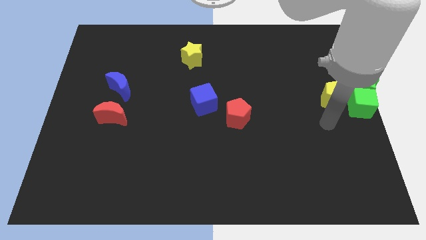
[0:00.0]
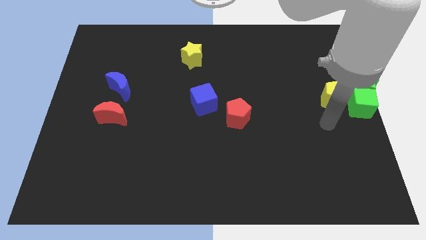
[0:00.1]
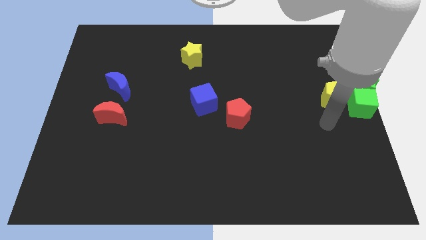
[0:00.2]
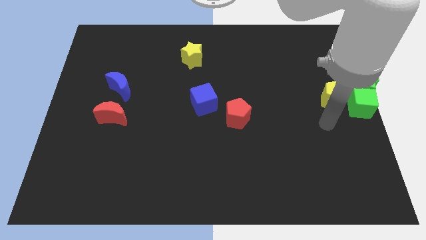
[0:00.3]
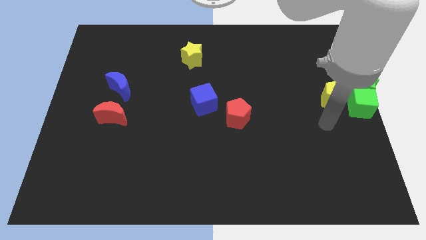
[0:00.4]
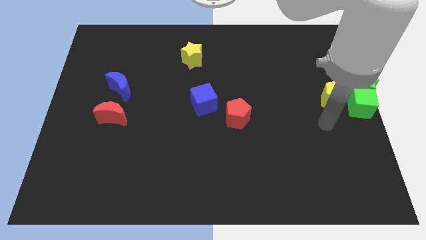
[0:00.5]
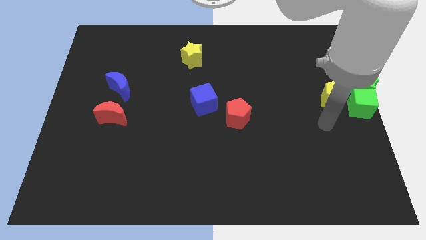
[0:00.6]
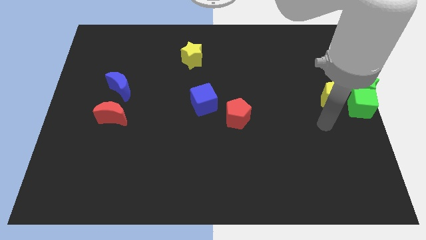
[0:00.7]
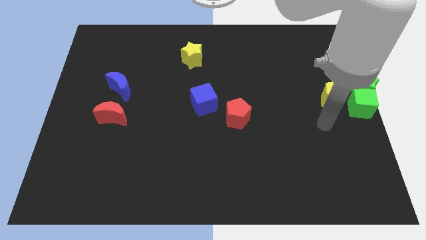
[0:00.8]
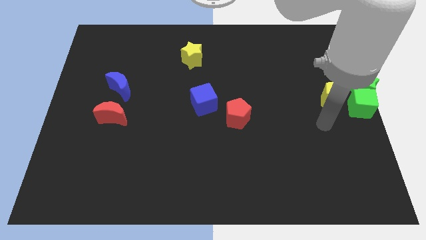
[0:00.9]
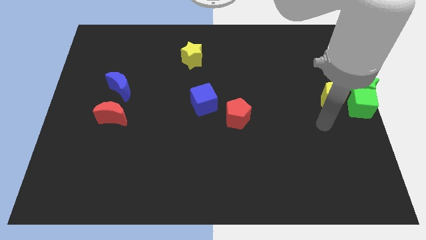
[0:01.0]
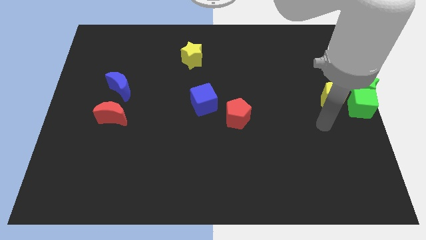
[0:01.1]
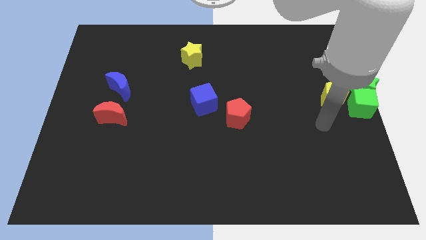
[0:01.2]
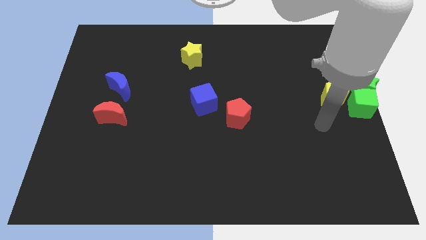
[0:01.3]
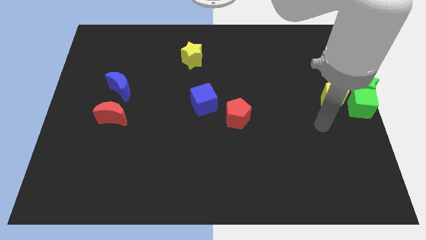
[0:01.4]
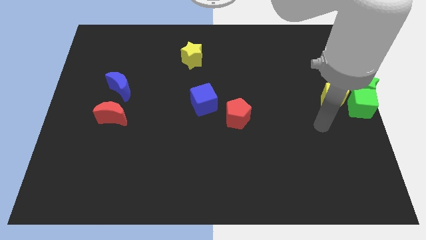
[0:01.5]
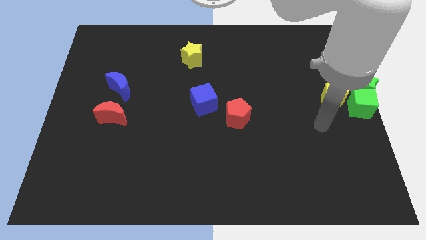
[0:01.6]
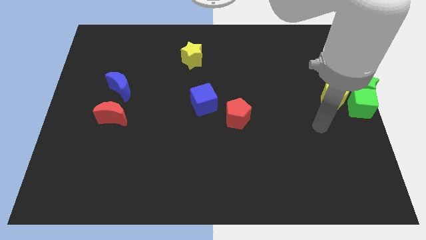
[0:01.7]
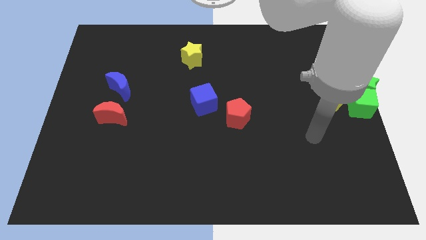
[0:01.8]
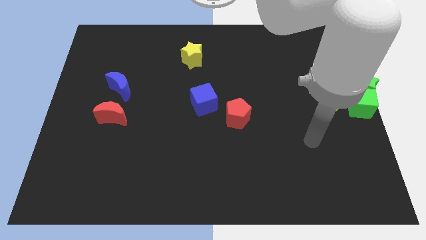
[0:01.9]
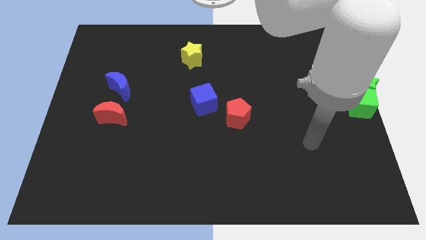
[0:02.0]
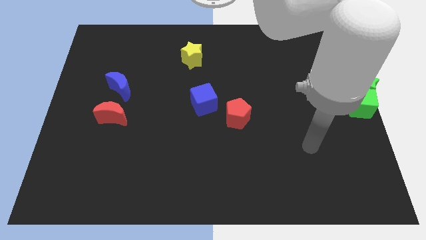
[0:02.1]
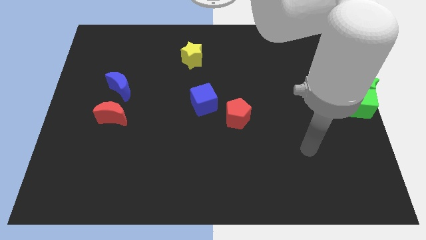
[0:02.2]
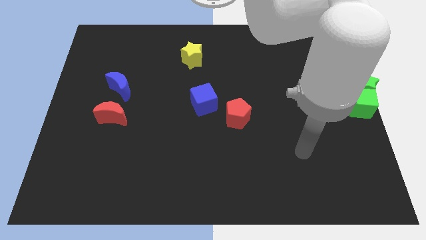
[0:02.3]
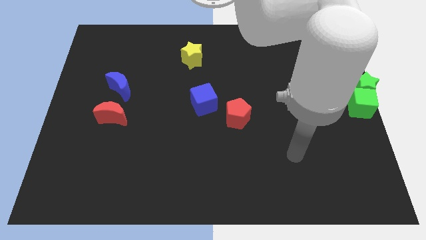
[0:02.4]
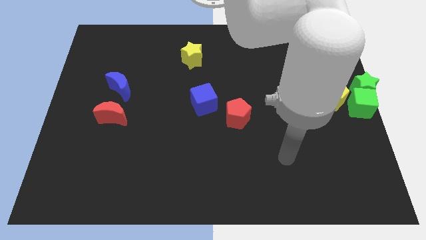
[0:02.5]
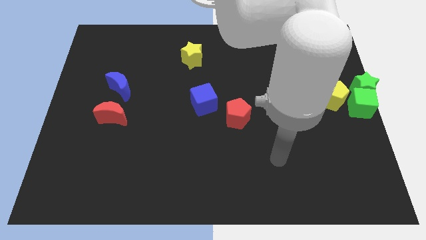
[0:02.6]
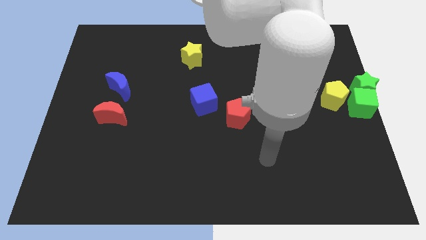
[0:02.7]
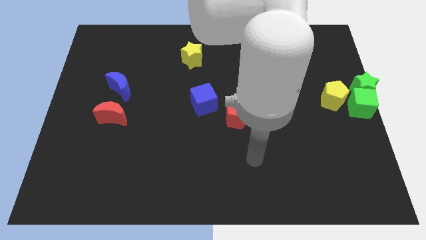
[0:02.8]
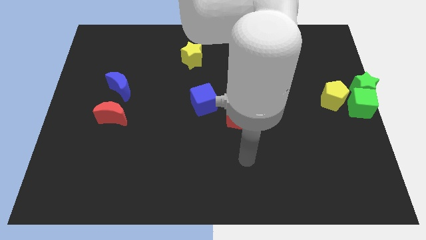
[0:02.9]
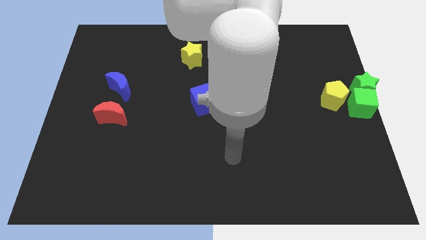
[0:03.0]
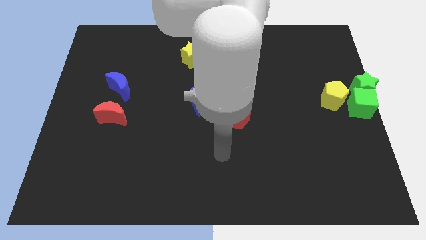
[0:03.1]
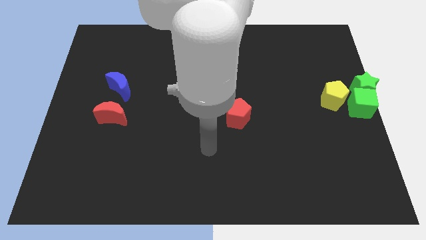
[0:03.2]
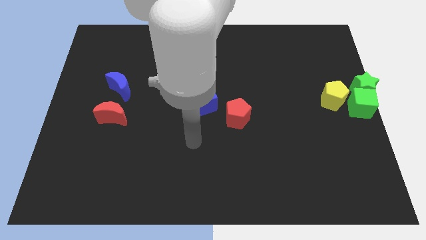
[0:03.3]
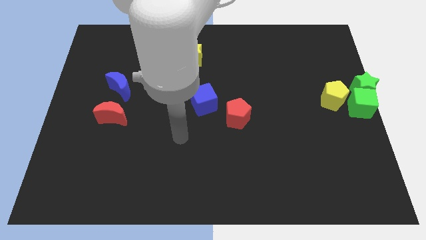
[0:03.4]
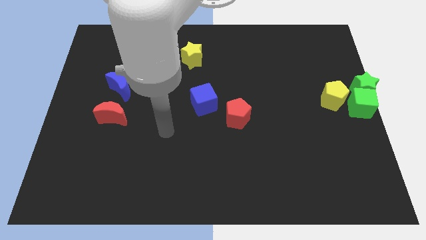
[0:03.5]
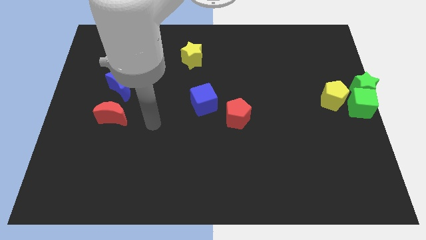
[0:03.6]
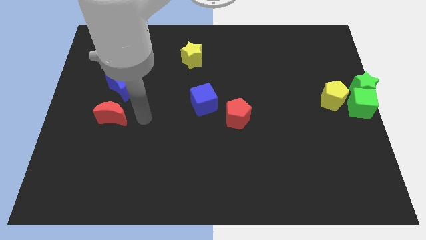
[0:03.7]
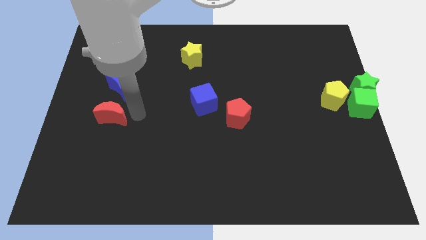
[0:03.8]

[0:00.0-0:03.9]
point your arm to the right side of the red moon

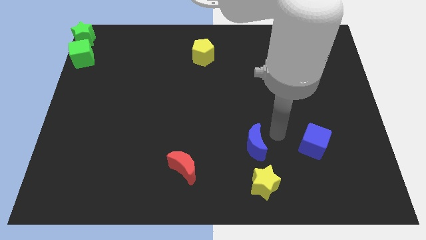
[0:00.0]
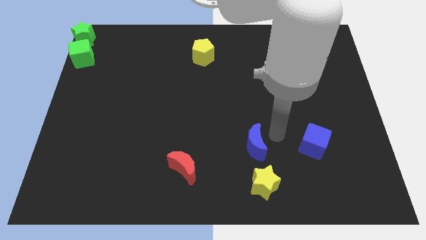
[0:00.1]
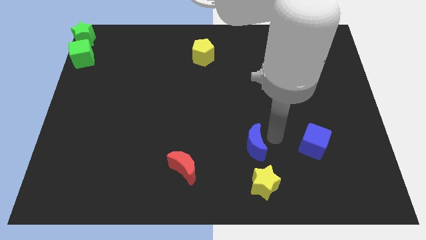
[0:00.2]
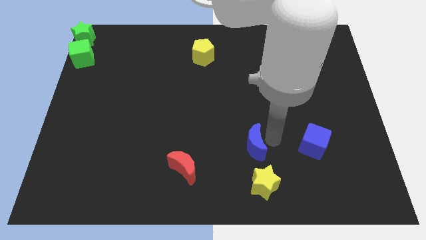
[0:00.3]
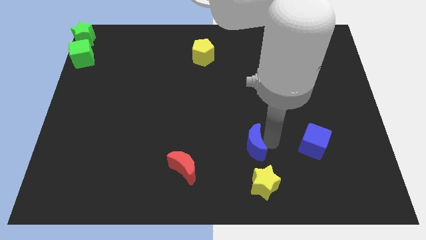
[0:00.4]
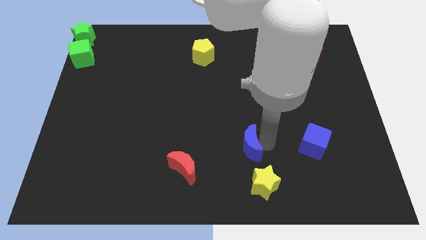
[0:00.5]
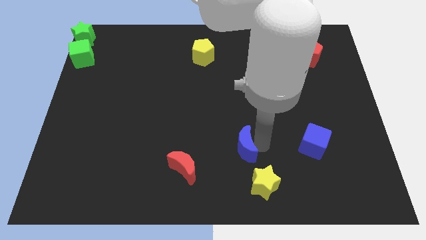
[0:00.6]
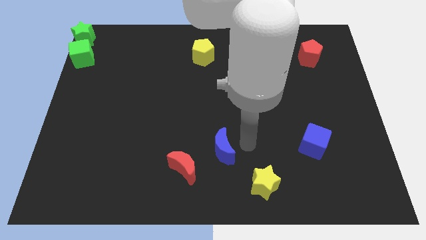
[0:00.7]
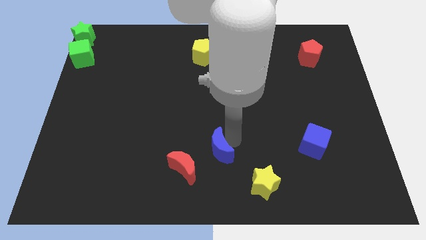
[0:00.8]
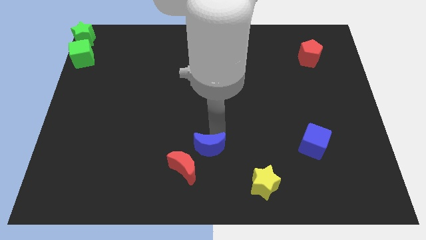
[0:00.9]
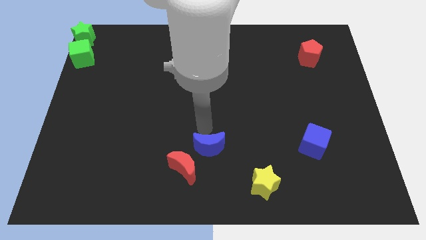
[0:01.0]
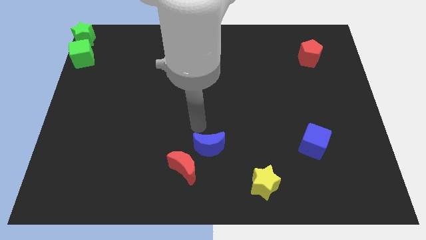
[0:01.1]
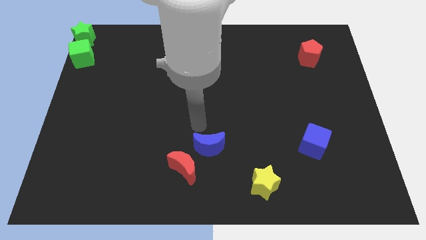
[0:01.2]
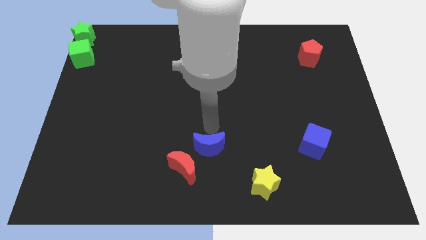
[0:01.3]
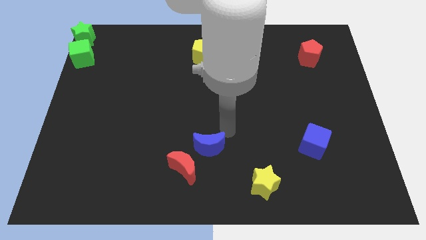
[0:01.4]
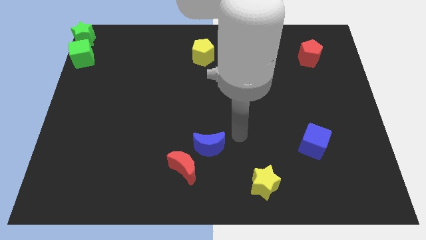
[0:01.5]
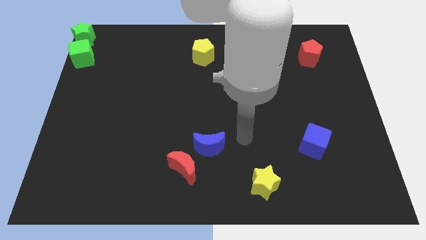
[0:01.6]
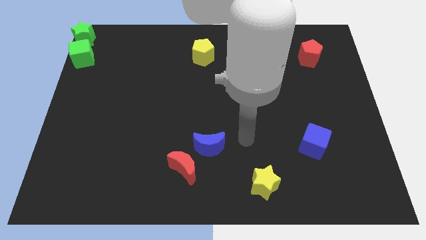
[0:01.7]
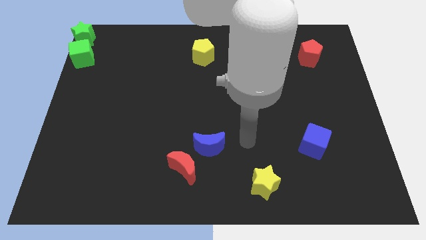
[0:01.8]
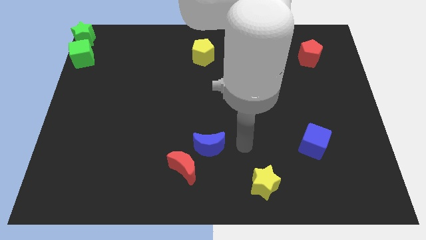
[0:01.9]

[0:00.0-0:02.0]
place the blue moon above the red moon

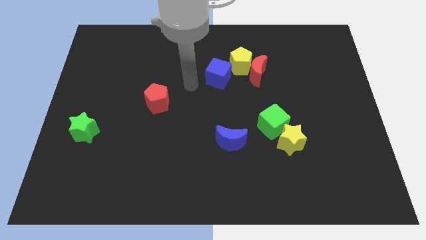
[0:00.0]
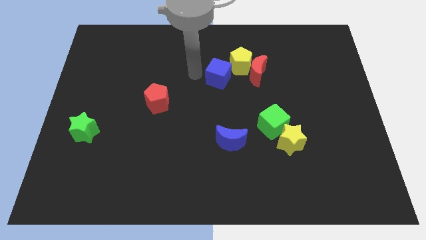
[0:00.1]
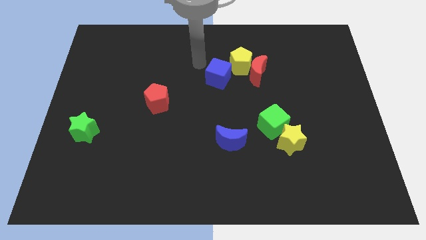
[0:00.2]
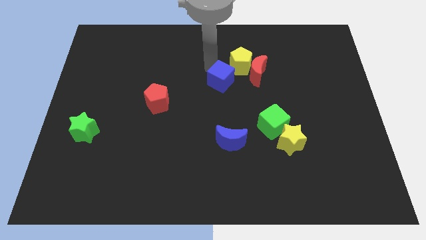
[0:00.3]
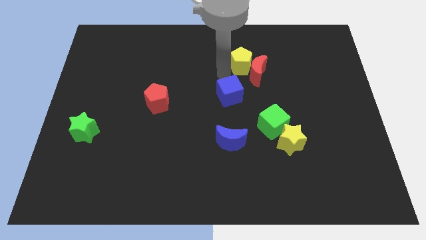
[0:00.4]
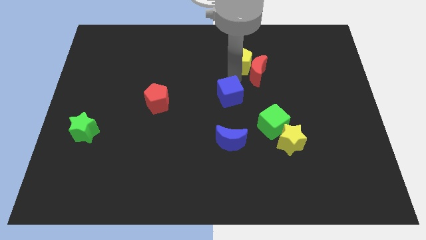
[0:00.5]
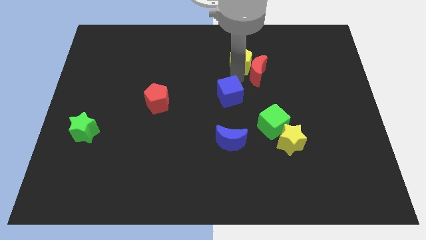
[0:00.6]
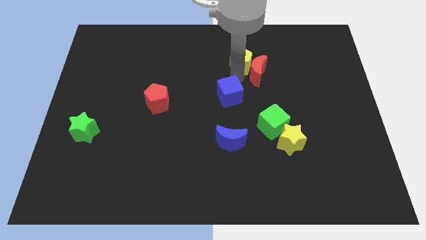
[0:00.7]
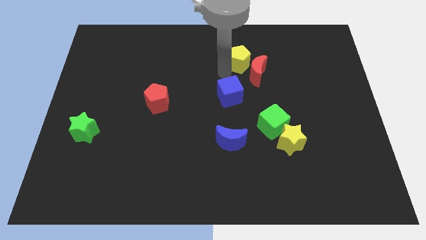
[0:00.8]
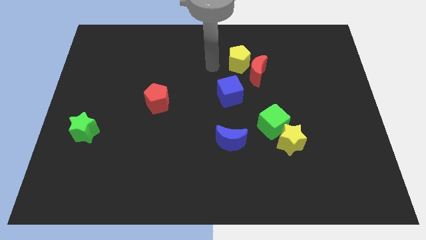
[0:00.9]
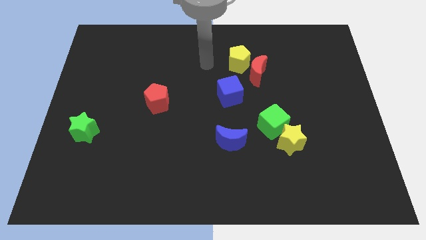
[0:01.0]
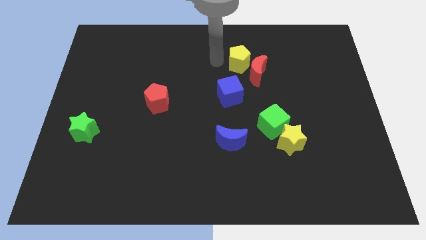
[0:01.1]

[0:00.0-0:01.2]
separate the blue cube from the yellow pentagon

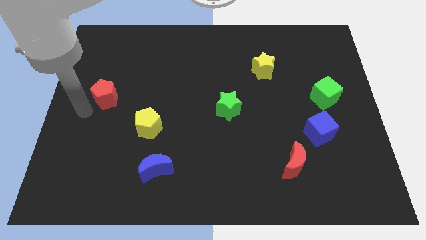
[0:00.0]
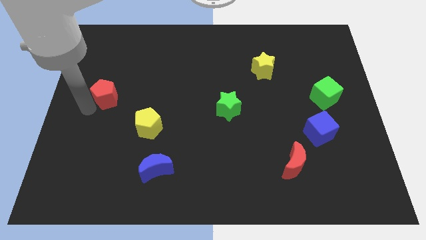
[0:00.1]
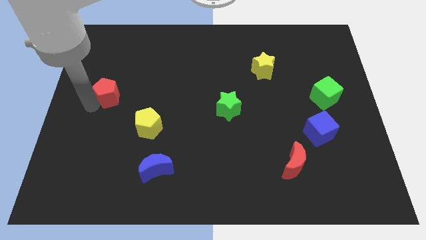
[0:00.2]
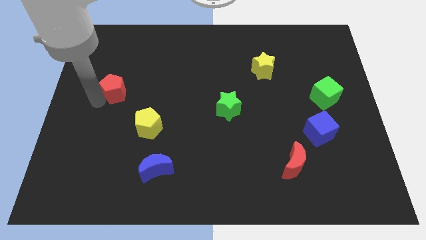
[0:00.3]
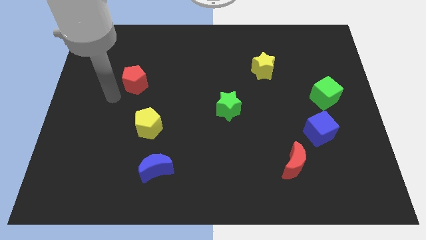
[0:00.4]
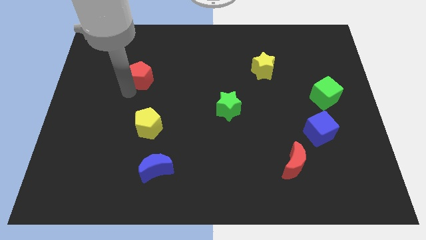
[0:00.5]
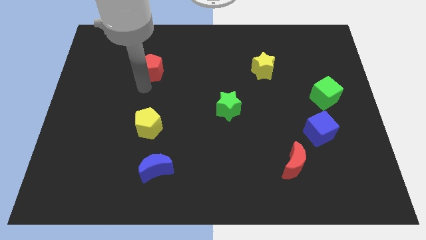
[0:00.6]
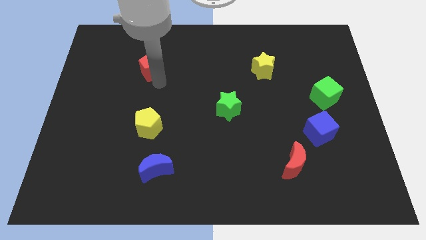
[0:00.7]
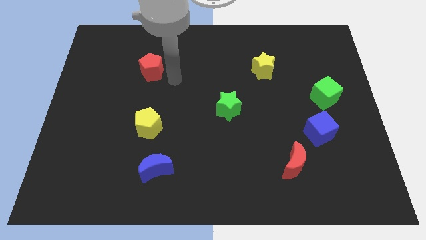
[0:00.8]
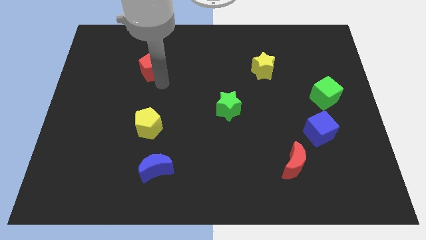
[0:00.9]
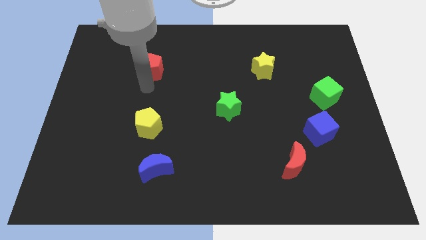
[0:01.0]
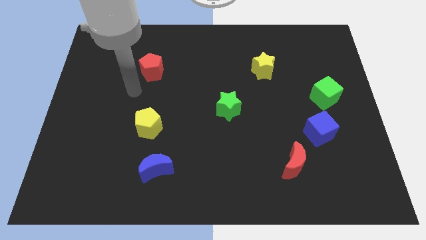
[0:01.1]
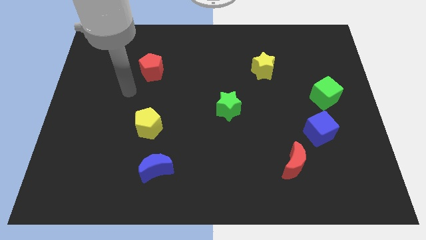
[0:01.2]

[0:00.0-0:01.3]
place the red pentagon vertically above the top side of the yellow pentagon

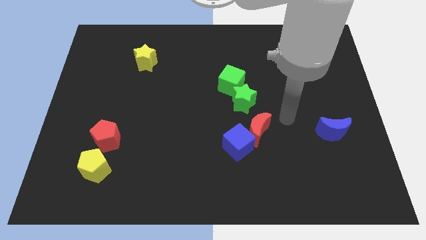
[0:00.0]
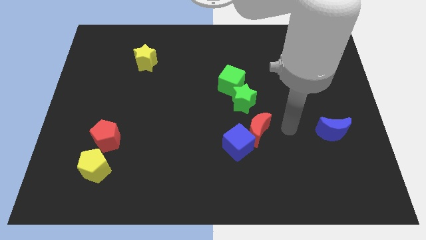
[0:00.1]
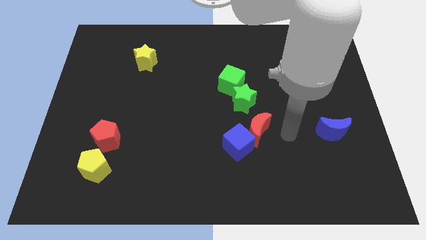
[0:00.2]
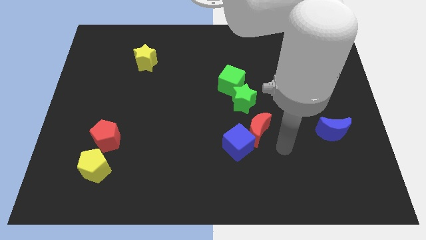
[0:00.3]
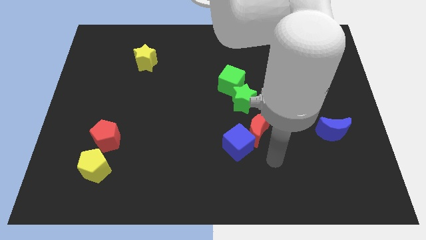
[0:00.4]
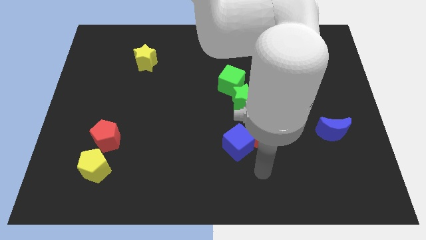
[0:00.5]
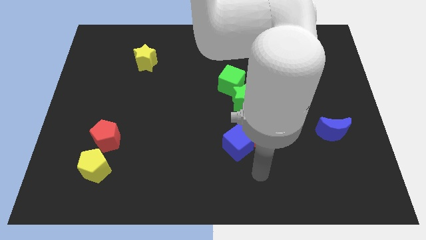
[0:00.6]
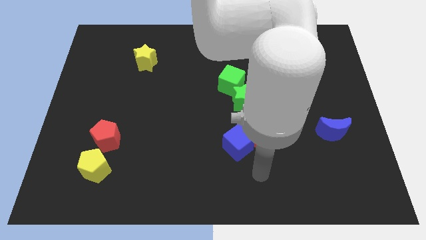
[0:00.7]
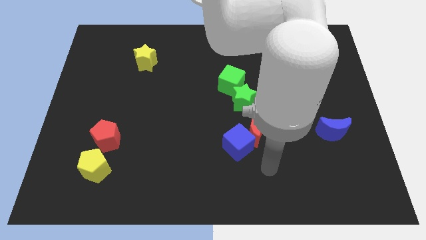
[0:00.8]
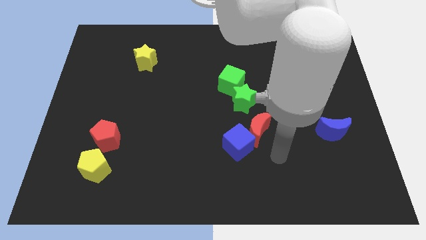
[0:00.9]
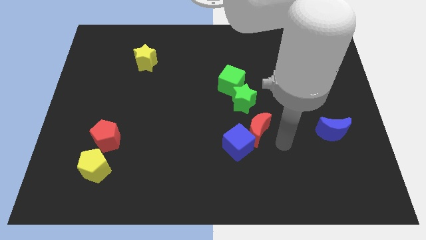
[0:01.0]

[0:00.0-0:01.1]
point the arm to the right of the red crescent
